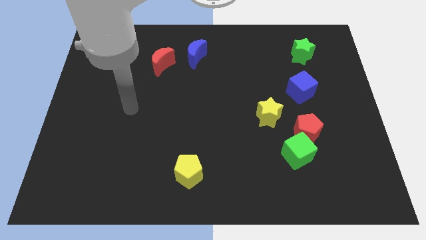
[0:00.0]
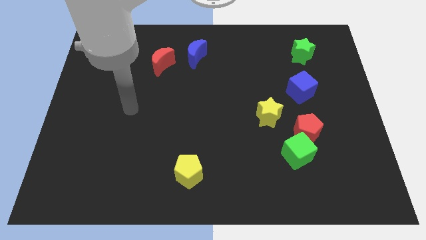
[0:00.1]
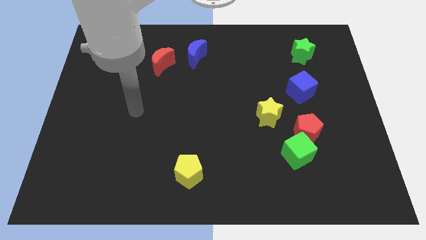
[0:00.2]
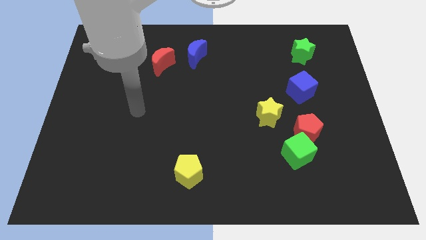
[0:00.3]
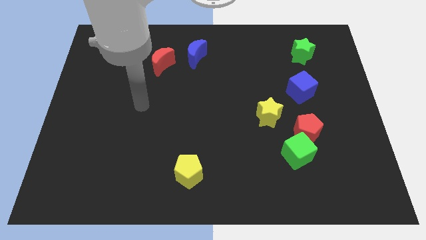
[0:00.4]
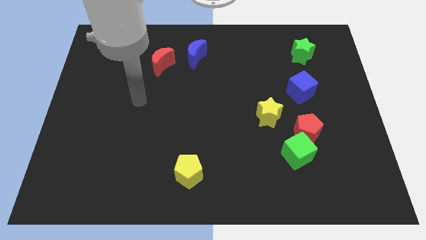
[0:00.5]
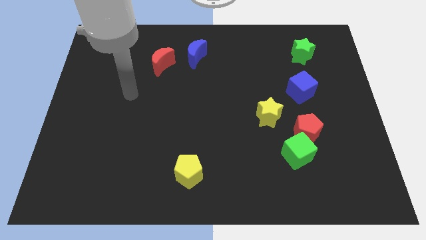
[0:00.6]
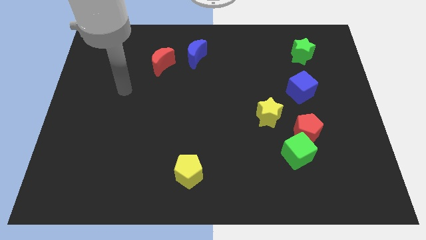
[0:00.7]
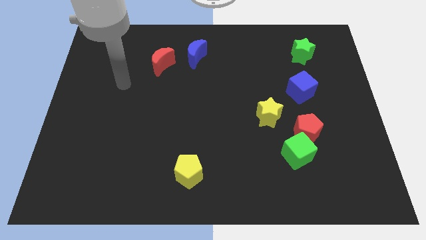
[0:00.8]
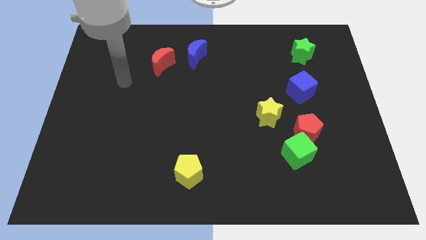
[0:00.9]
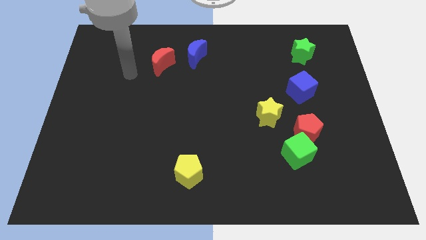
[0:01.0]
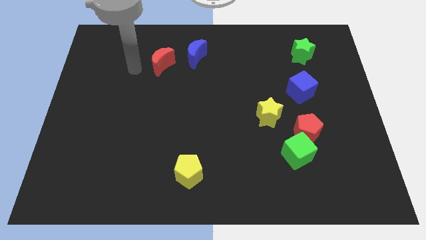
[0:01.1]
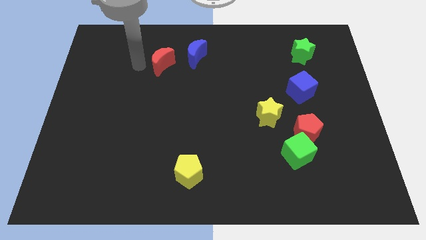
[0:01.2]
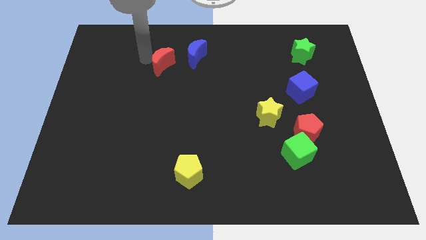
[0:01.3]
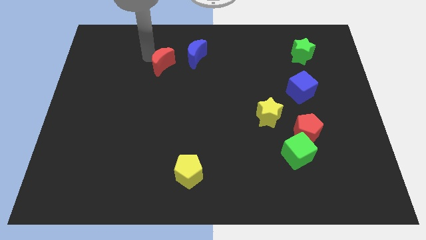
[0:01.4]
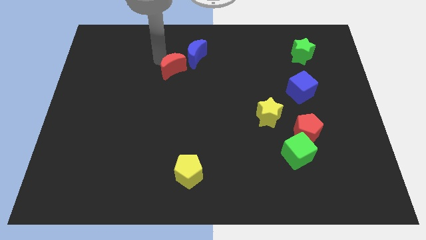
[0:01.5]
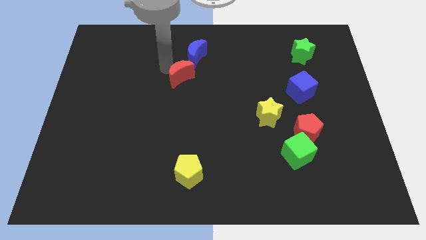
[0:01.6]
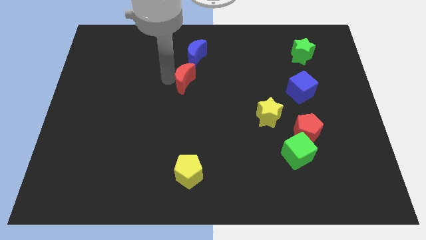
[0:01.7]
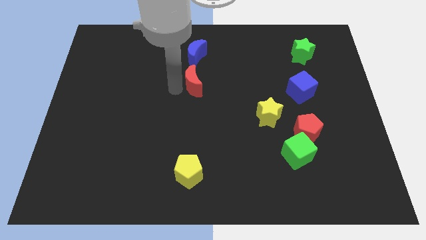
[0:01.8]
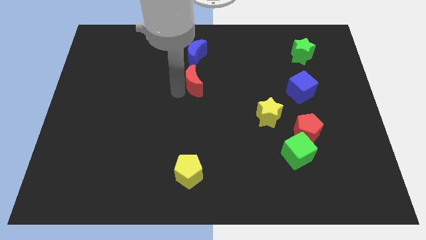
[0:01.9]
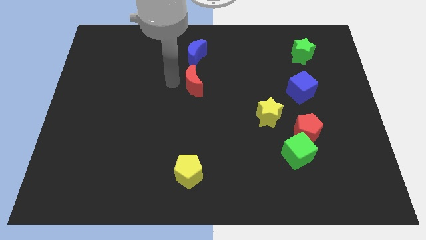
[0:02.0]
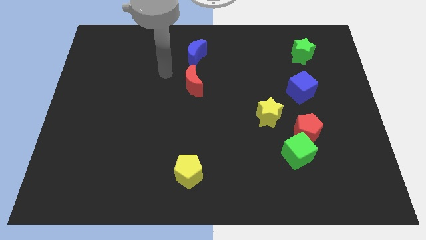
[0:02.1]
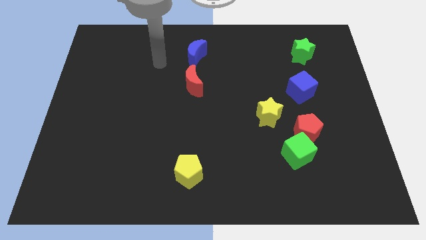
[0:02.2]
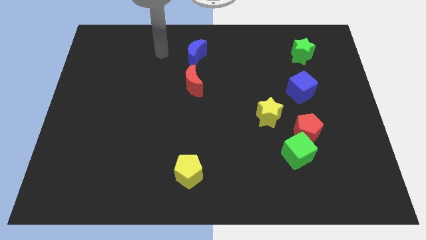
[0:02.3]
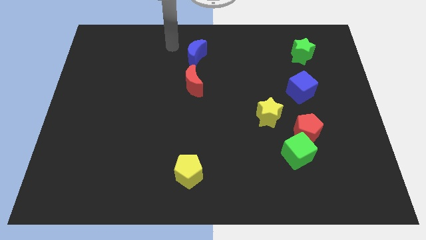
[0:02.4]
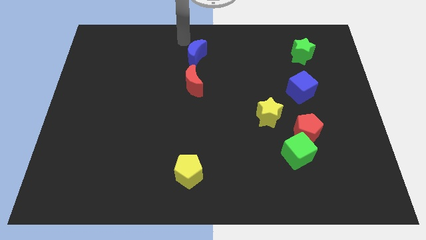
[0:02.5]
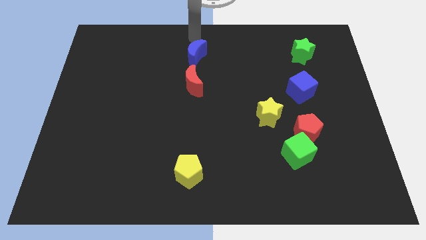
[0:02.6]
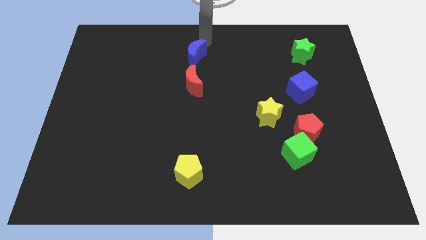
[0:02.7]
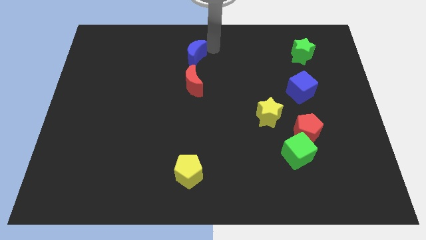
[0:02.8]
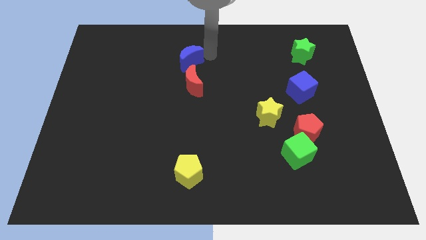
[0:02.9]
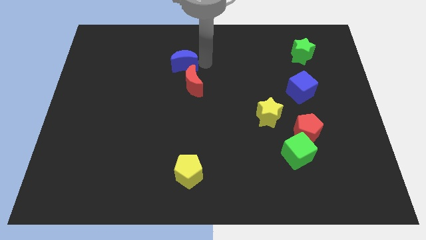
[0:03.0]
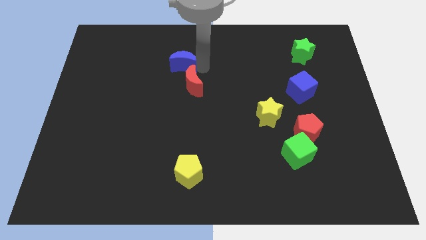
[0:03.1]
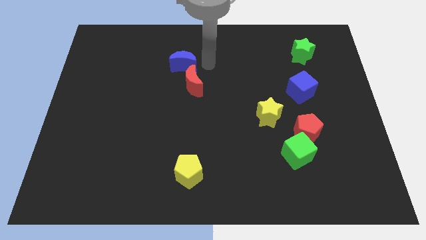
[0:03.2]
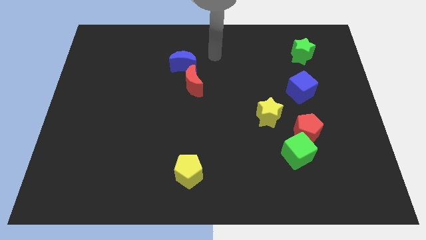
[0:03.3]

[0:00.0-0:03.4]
push the red moon blue crescent to the center

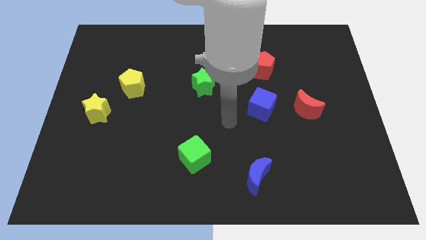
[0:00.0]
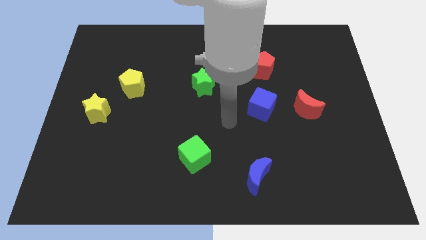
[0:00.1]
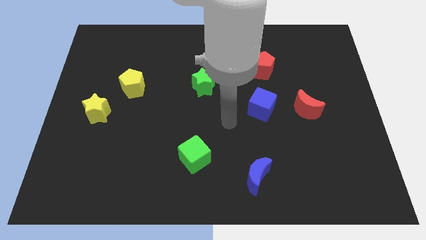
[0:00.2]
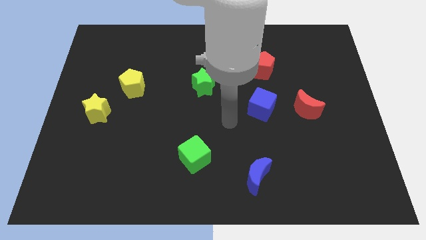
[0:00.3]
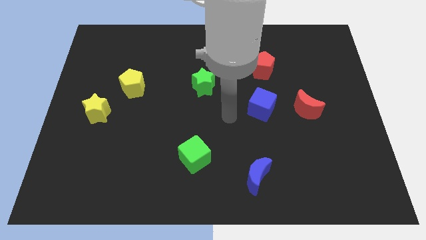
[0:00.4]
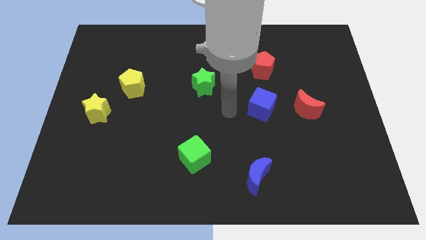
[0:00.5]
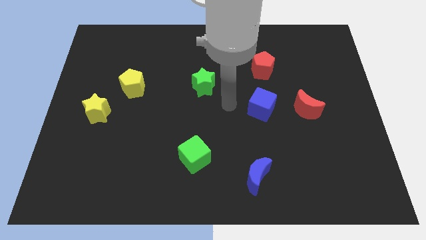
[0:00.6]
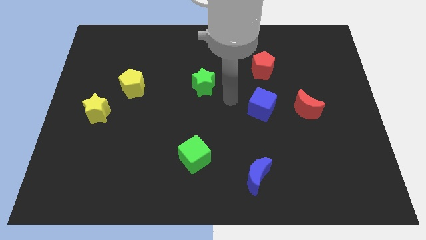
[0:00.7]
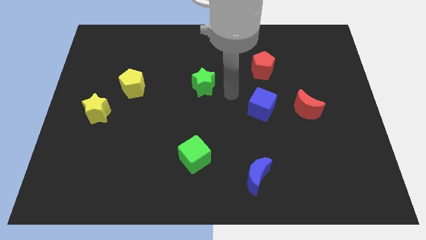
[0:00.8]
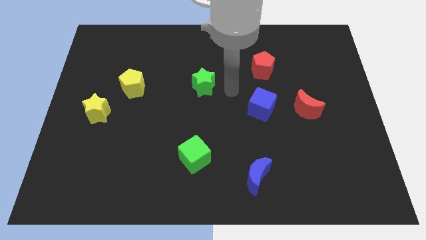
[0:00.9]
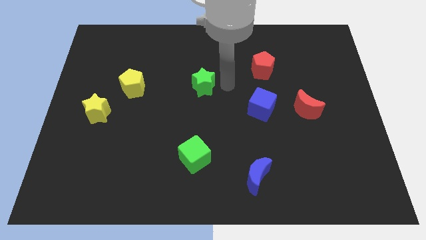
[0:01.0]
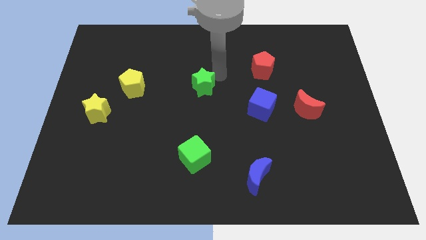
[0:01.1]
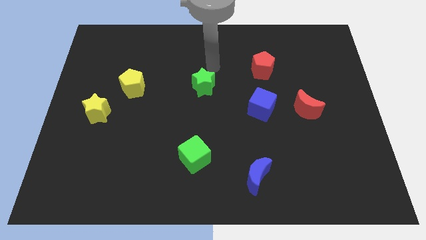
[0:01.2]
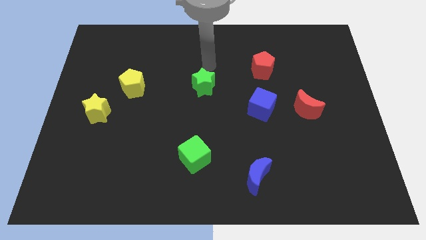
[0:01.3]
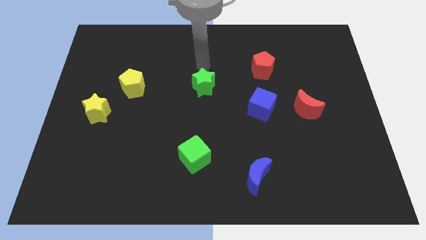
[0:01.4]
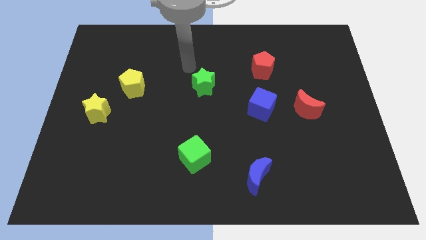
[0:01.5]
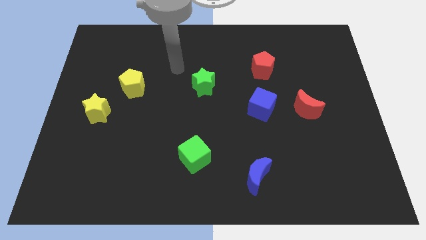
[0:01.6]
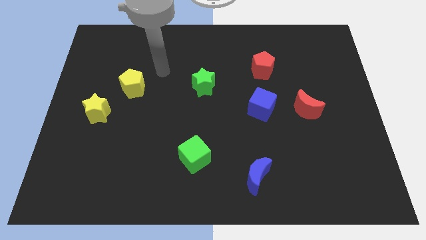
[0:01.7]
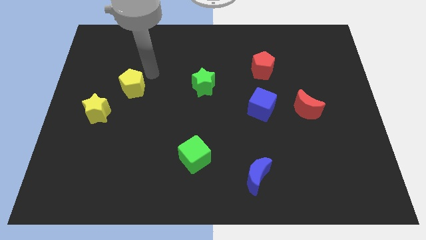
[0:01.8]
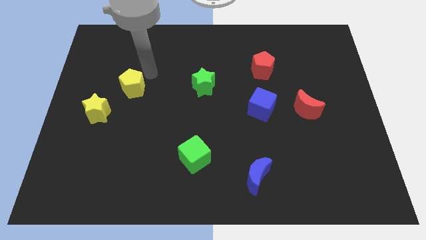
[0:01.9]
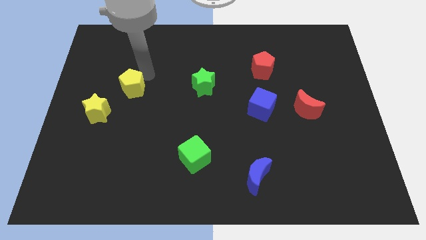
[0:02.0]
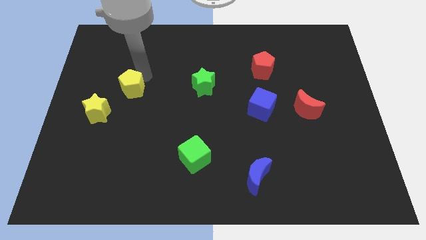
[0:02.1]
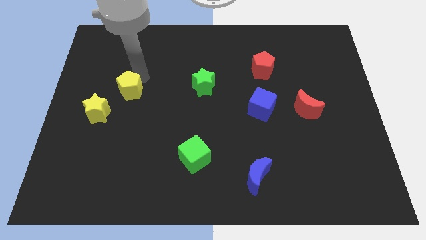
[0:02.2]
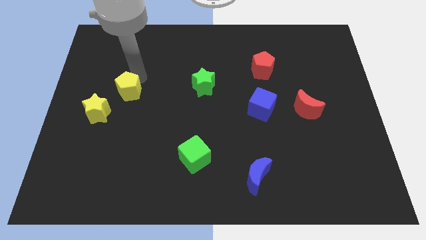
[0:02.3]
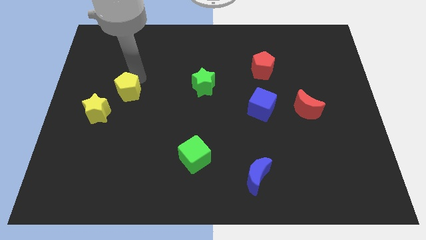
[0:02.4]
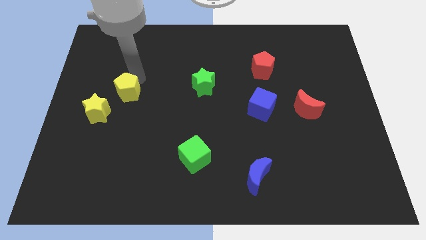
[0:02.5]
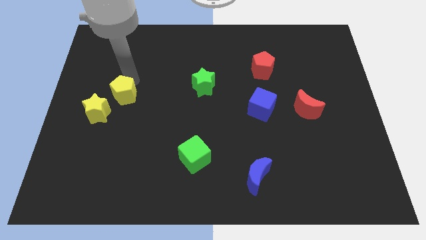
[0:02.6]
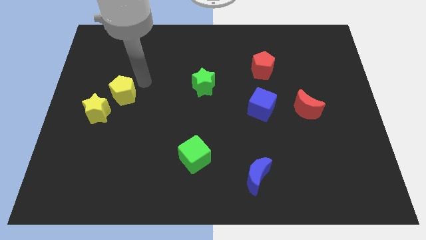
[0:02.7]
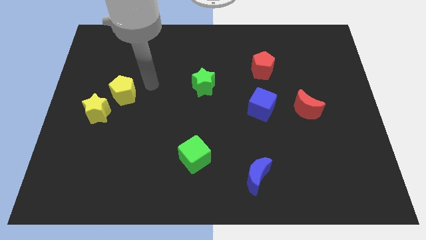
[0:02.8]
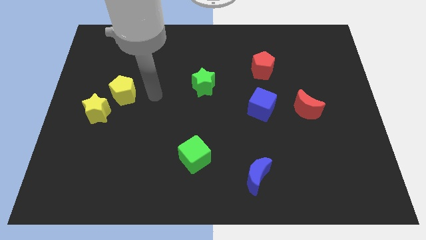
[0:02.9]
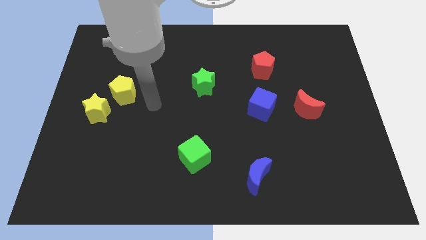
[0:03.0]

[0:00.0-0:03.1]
slide the yellow pentagon close to the yellow star

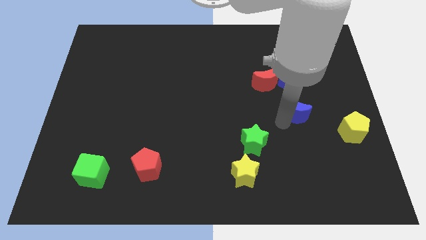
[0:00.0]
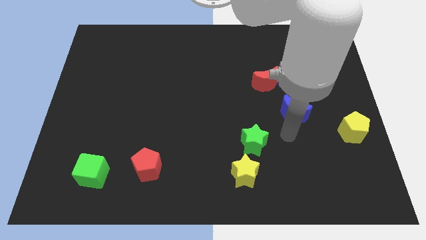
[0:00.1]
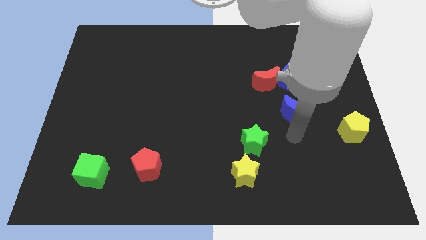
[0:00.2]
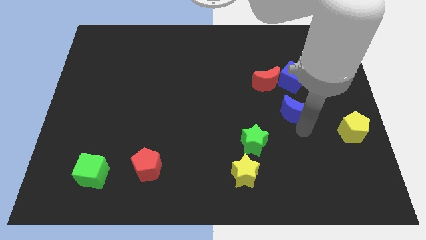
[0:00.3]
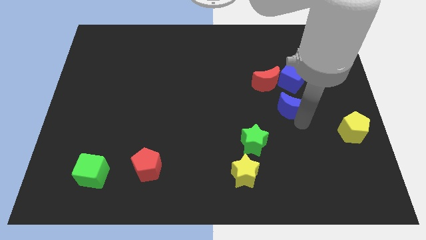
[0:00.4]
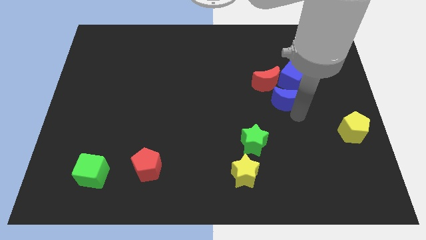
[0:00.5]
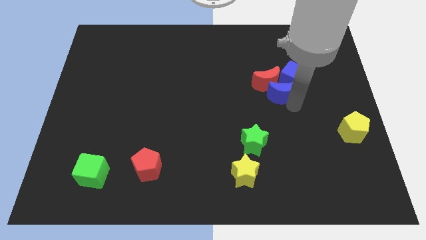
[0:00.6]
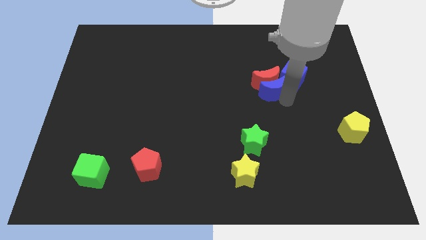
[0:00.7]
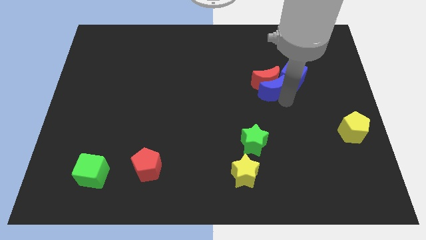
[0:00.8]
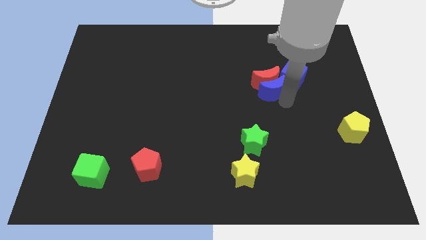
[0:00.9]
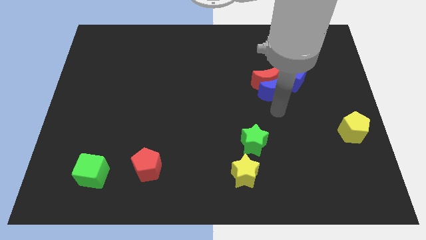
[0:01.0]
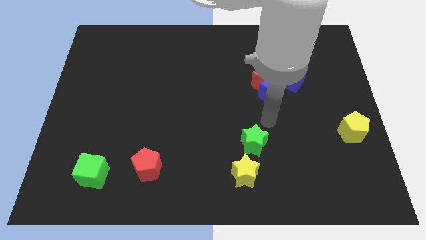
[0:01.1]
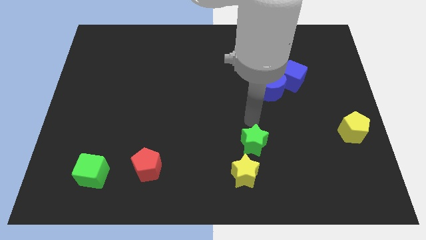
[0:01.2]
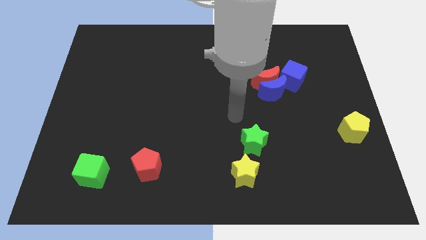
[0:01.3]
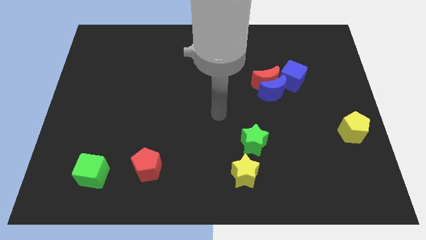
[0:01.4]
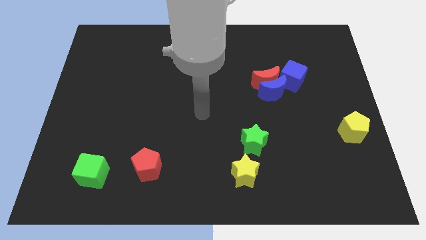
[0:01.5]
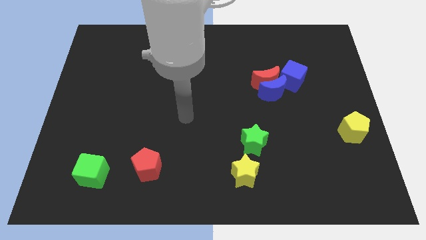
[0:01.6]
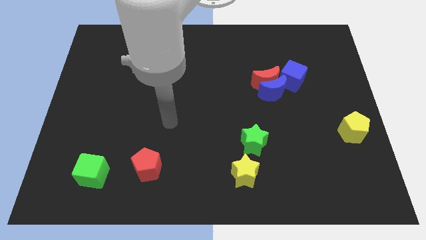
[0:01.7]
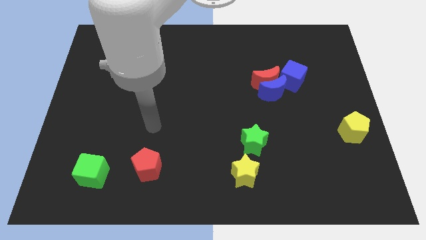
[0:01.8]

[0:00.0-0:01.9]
push the blue crescent into the red crescent

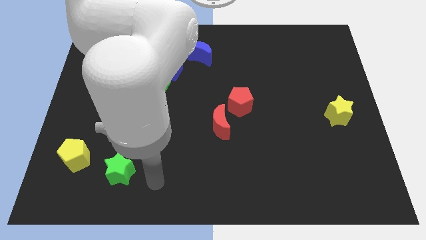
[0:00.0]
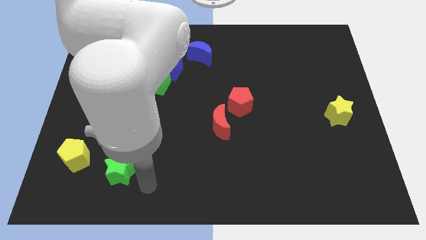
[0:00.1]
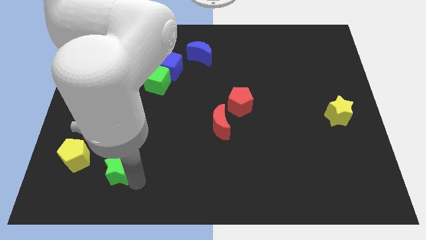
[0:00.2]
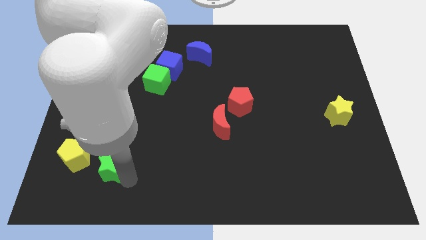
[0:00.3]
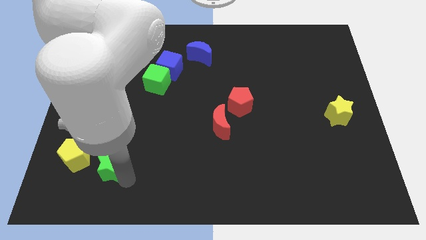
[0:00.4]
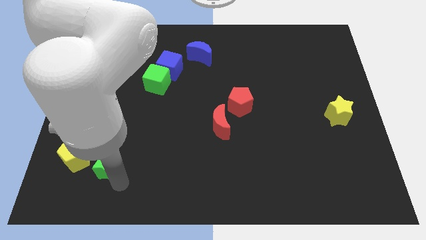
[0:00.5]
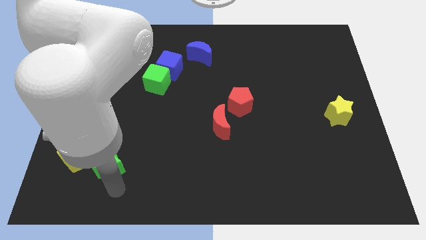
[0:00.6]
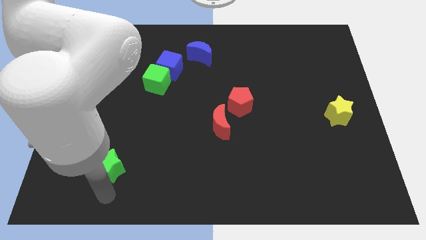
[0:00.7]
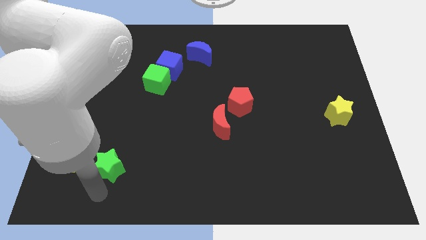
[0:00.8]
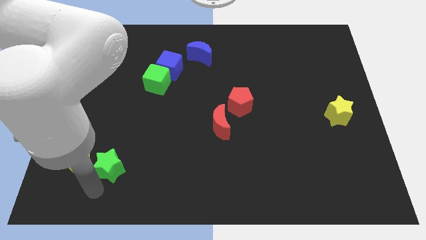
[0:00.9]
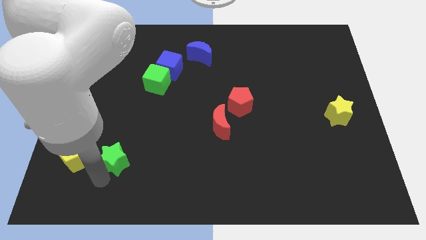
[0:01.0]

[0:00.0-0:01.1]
touch the bottom of green star
